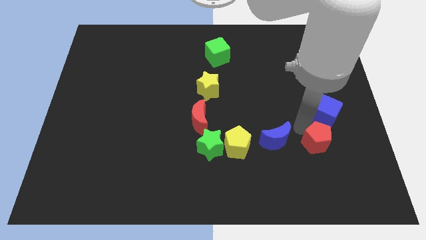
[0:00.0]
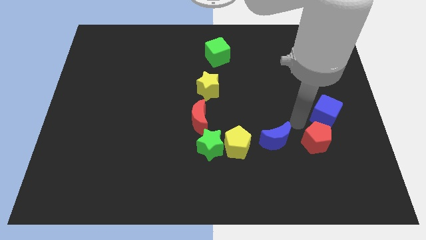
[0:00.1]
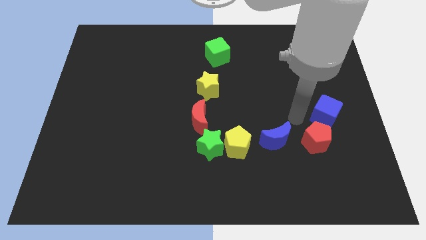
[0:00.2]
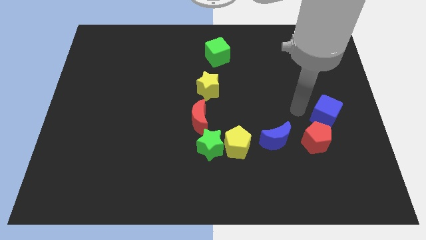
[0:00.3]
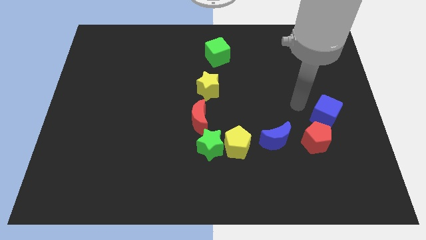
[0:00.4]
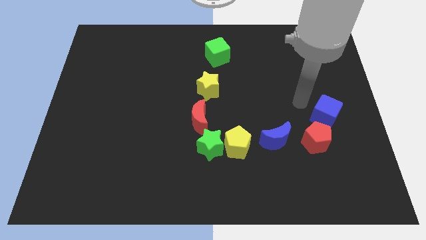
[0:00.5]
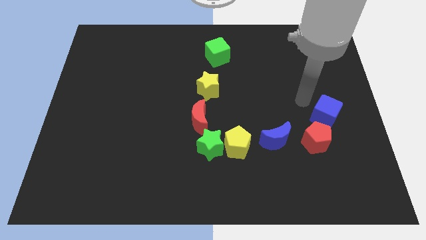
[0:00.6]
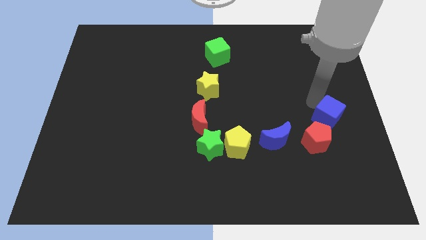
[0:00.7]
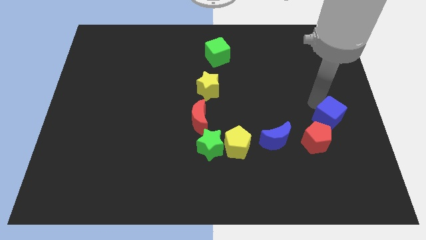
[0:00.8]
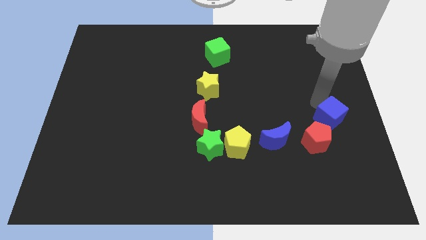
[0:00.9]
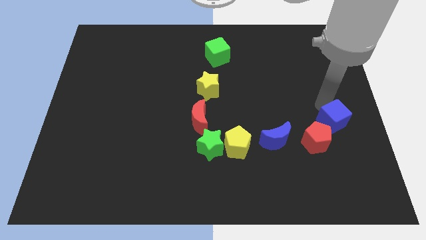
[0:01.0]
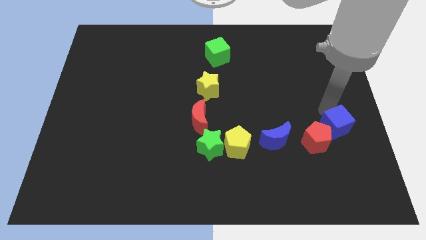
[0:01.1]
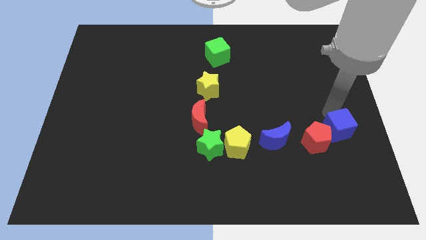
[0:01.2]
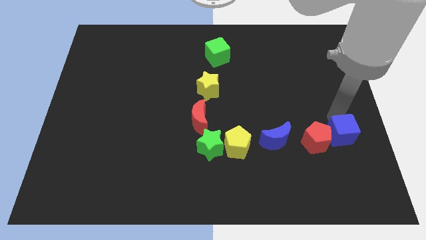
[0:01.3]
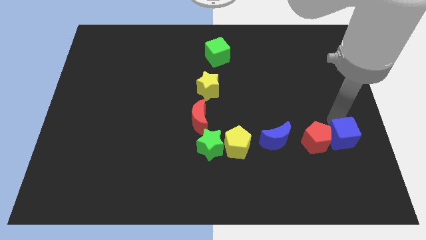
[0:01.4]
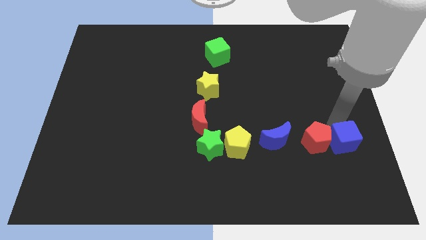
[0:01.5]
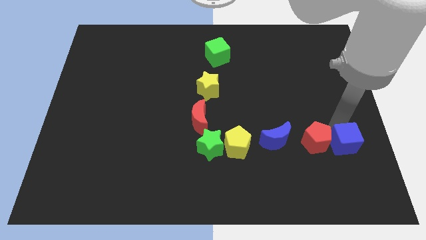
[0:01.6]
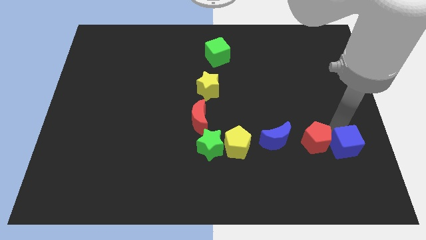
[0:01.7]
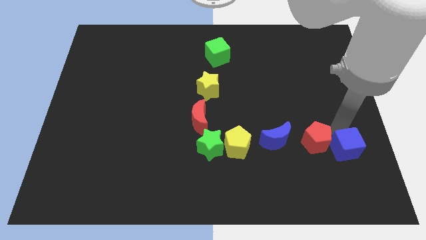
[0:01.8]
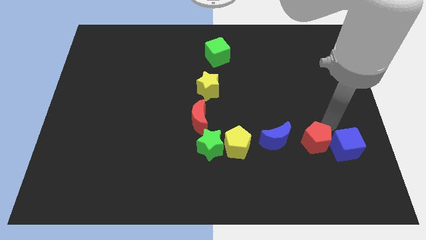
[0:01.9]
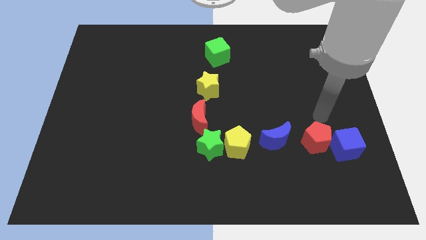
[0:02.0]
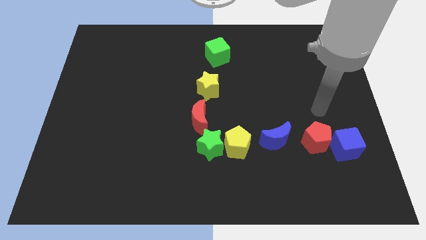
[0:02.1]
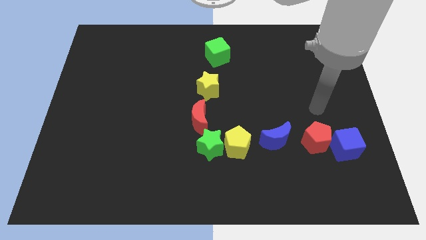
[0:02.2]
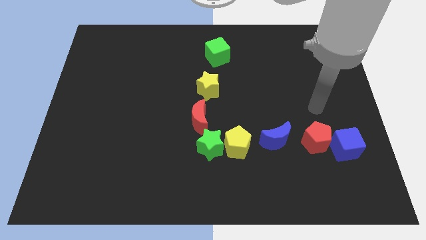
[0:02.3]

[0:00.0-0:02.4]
move the blue cube to the right of the red pentagon

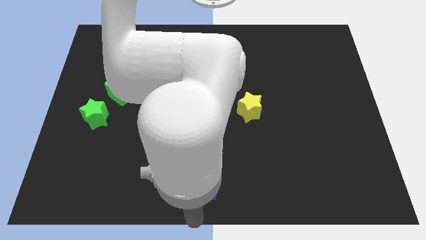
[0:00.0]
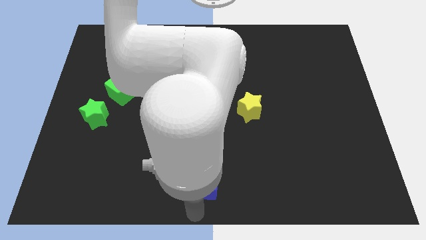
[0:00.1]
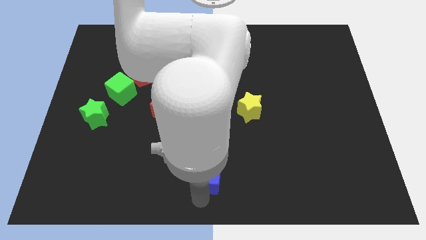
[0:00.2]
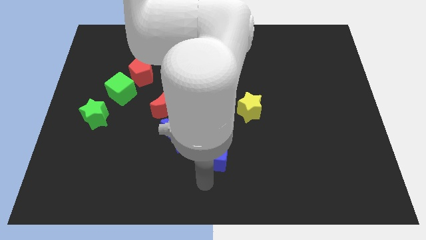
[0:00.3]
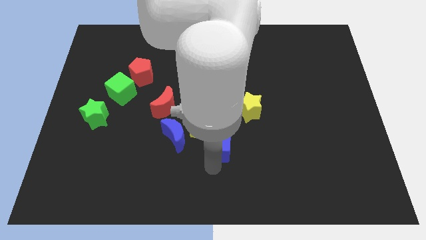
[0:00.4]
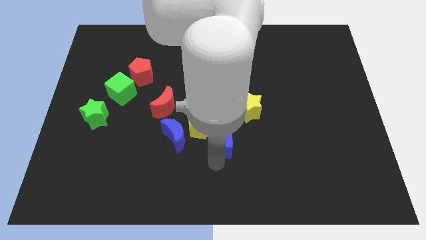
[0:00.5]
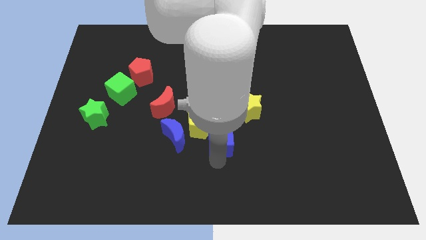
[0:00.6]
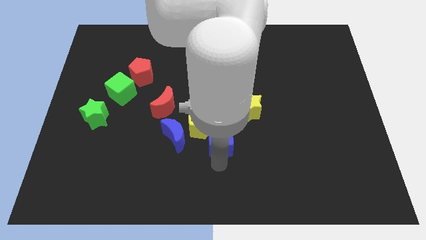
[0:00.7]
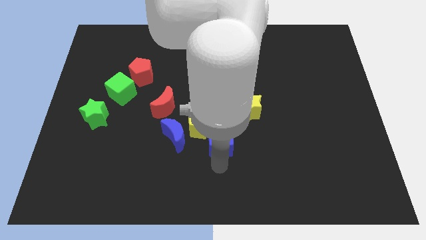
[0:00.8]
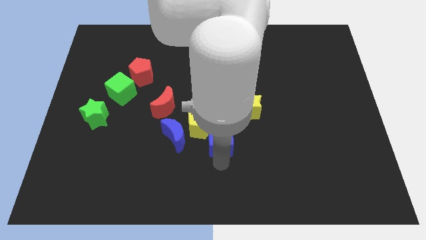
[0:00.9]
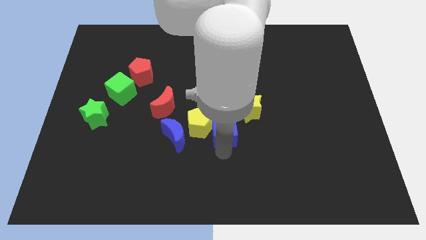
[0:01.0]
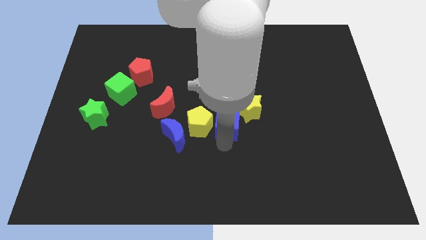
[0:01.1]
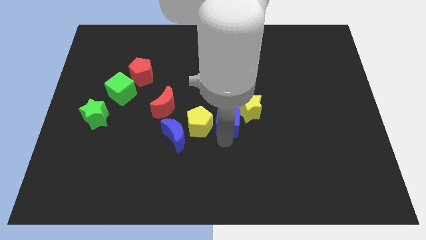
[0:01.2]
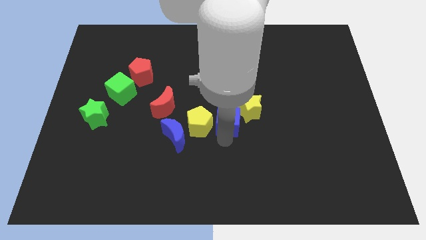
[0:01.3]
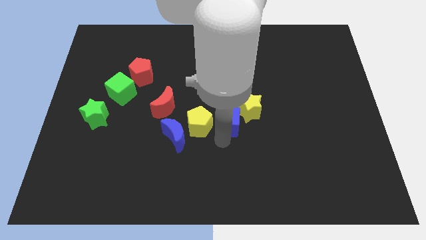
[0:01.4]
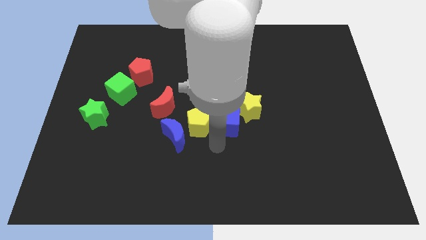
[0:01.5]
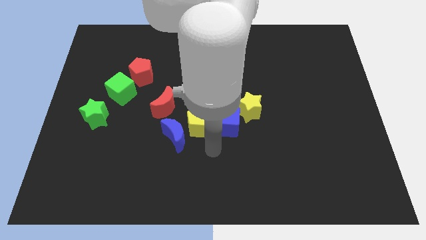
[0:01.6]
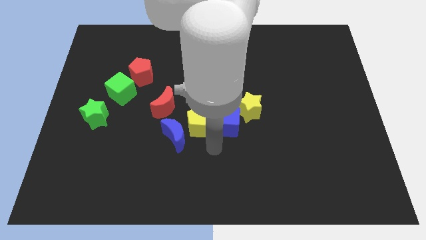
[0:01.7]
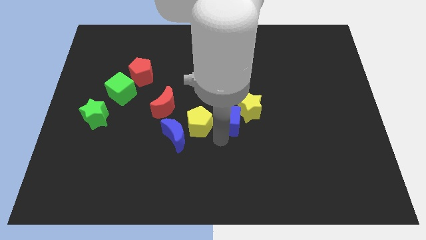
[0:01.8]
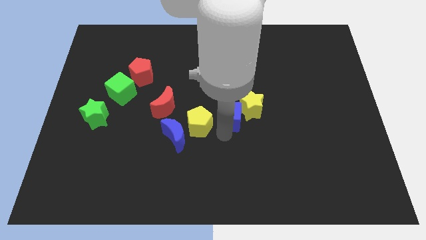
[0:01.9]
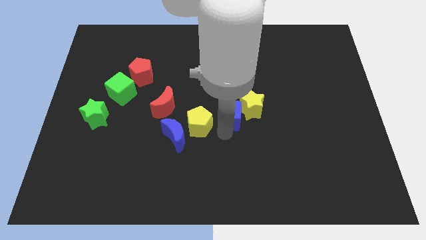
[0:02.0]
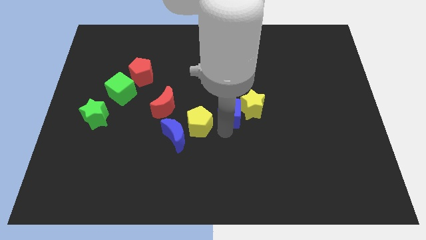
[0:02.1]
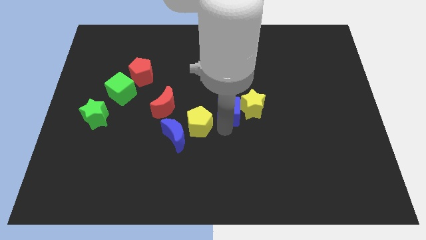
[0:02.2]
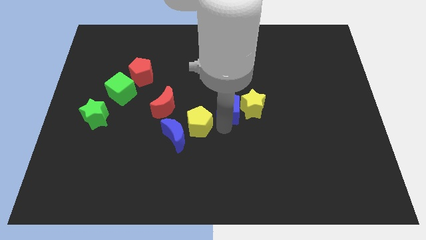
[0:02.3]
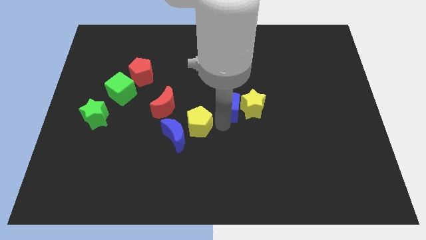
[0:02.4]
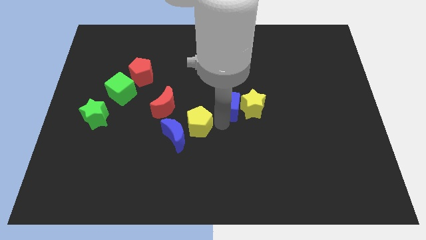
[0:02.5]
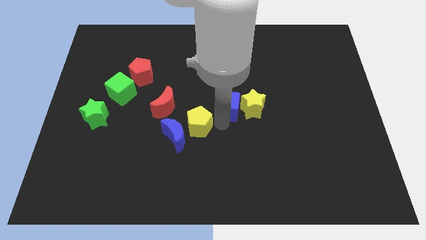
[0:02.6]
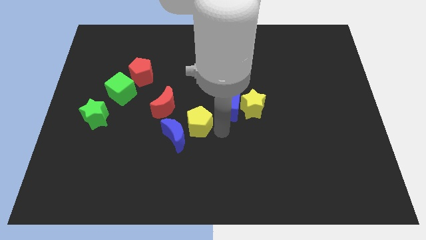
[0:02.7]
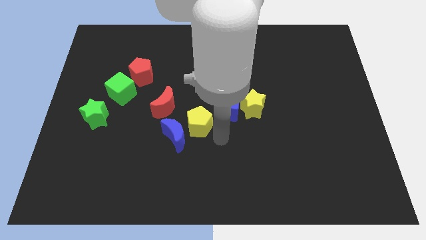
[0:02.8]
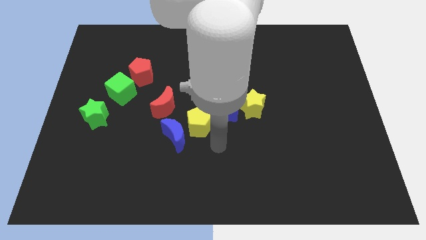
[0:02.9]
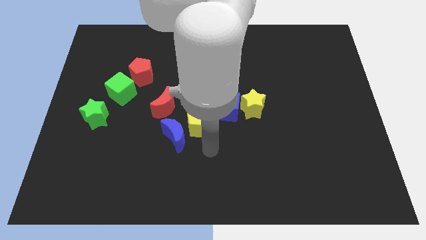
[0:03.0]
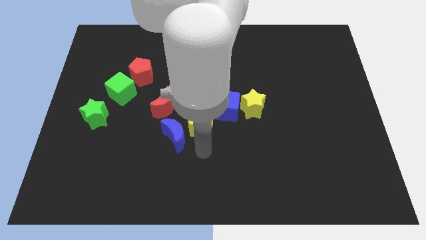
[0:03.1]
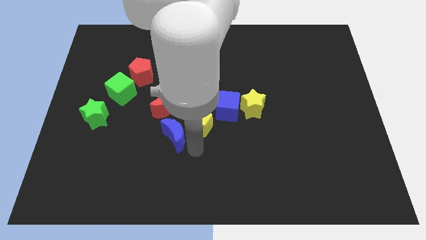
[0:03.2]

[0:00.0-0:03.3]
place blue cube close to left of the yellow star

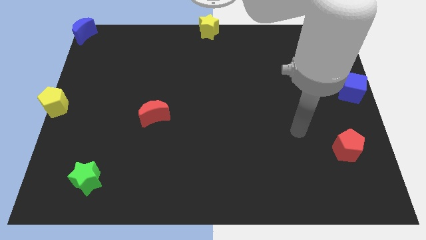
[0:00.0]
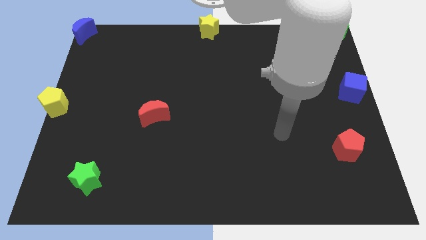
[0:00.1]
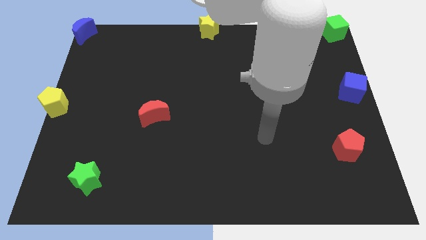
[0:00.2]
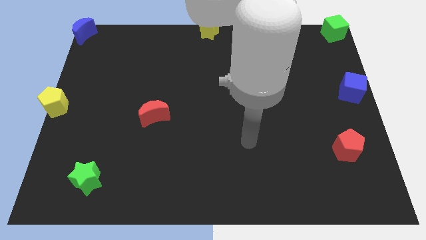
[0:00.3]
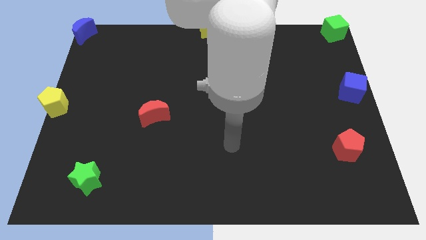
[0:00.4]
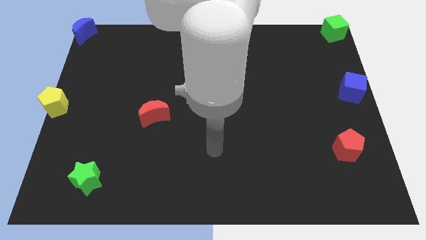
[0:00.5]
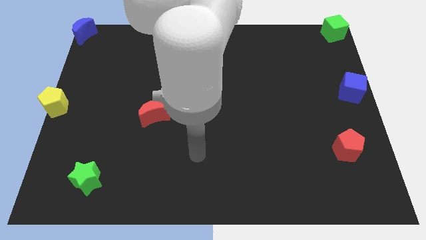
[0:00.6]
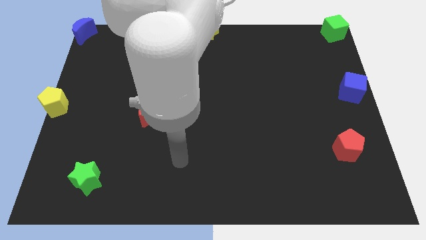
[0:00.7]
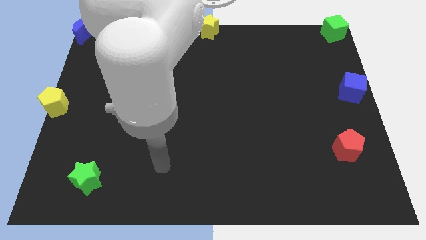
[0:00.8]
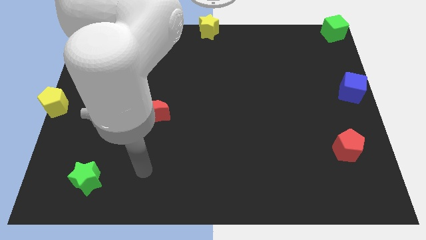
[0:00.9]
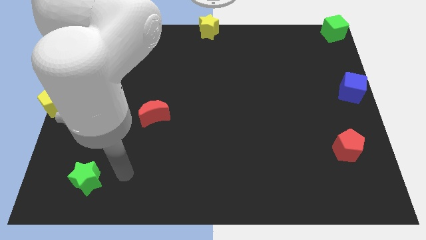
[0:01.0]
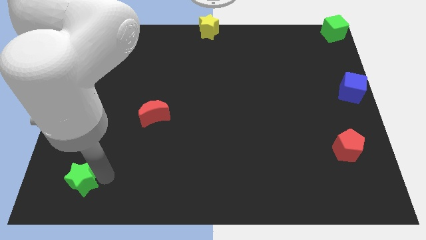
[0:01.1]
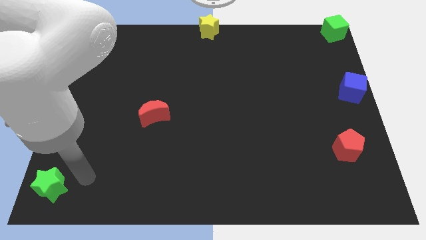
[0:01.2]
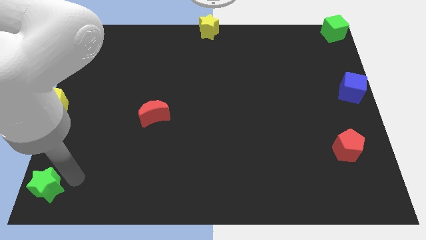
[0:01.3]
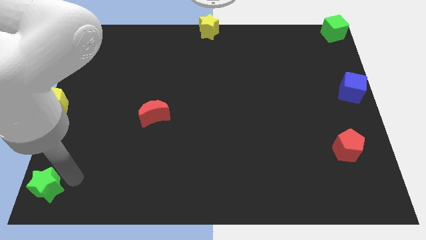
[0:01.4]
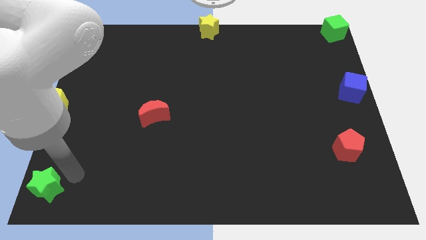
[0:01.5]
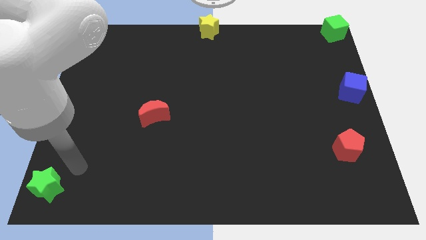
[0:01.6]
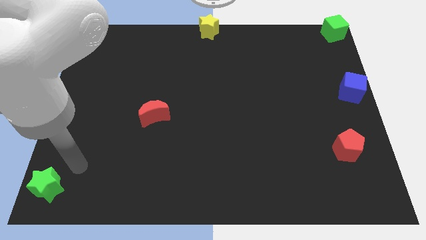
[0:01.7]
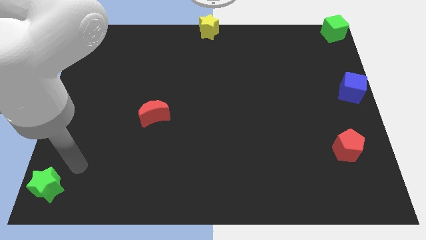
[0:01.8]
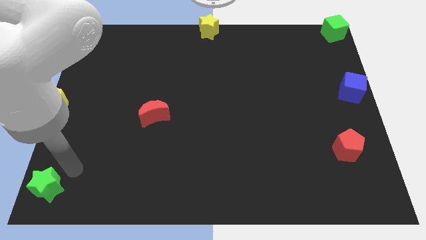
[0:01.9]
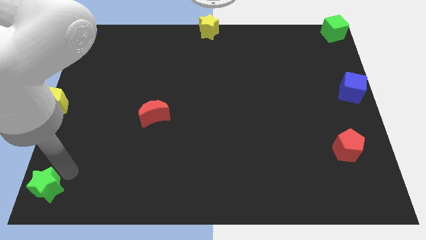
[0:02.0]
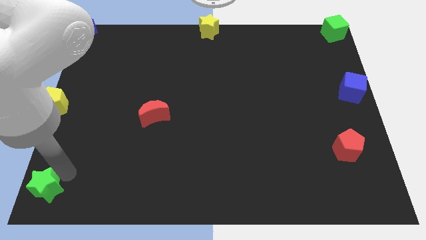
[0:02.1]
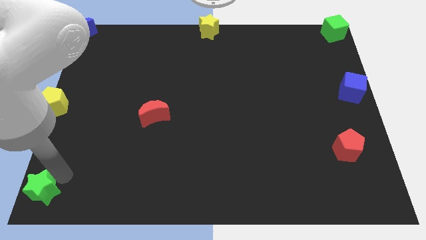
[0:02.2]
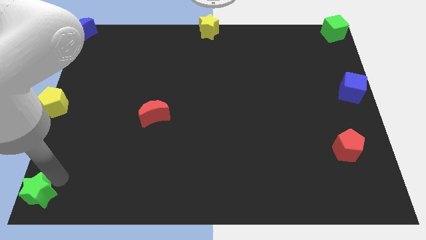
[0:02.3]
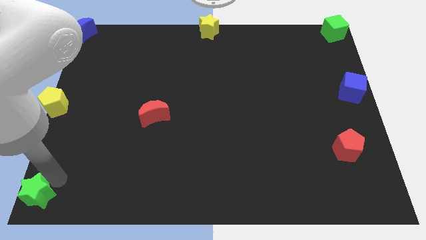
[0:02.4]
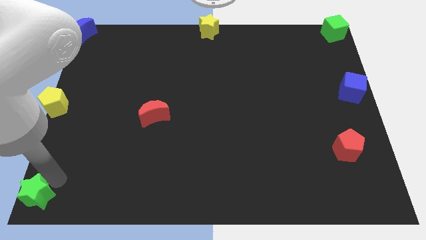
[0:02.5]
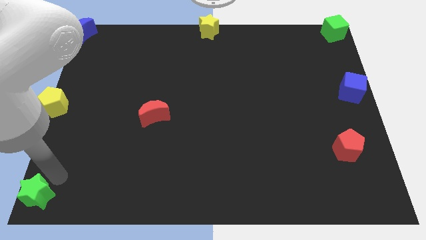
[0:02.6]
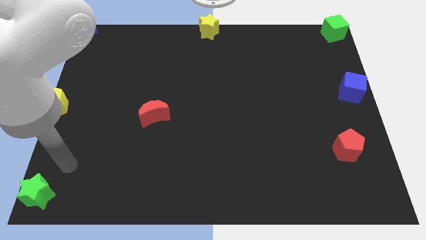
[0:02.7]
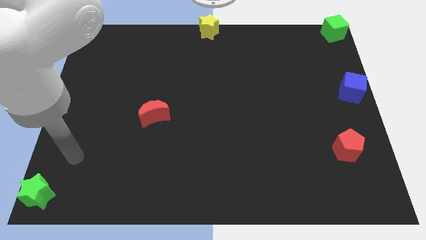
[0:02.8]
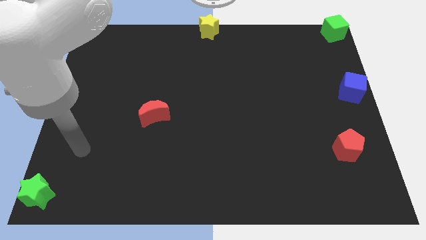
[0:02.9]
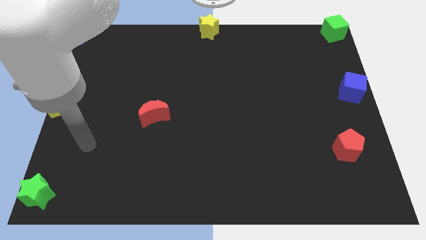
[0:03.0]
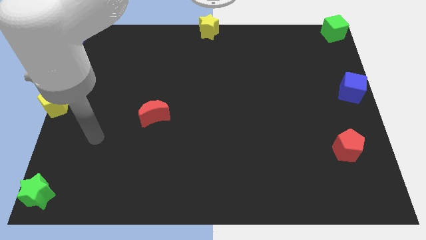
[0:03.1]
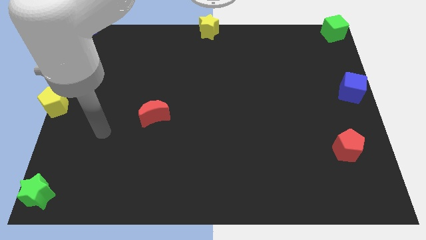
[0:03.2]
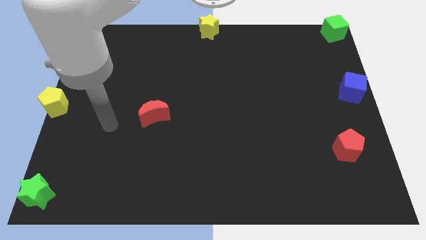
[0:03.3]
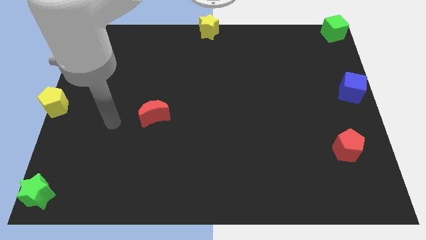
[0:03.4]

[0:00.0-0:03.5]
push the green star to the bottom left corner
